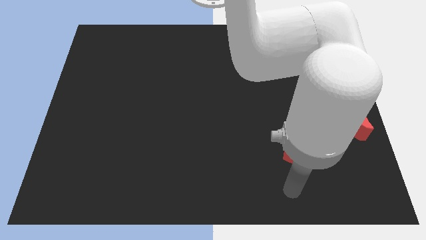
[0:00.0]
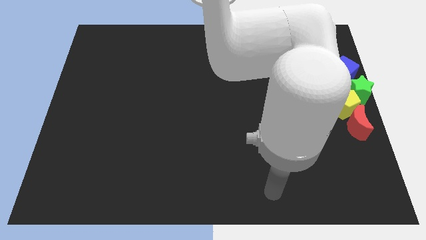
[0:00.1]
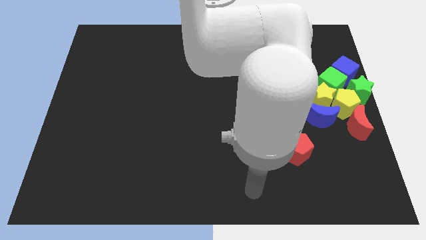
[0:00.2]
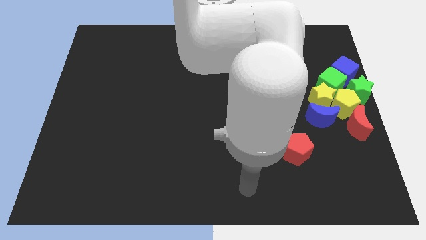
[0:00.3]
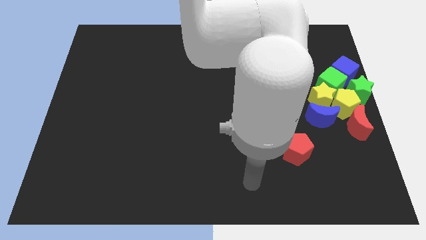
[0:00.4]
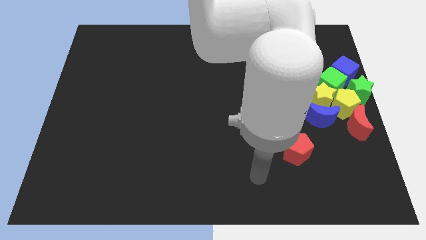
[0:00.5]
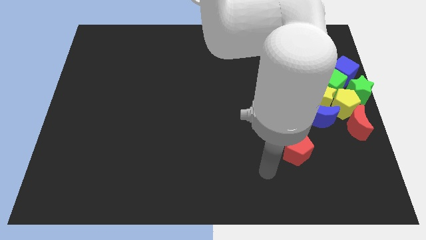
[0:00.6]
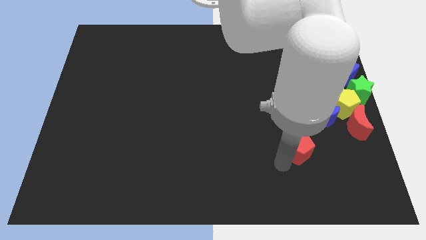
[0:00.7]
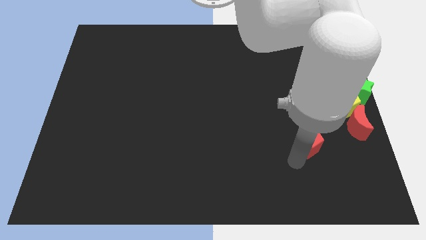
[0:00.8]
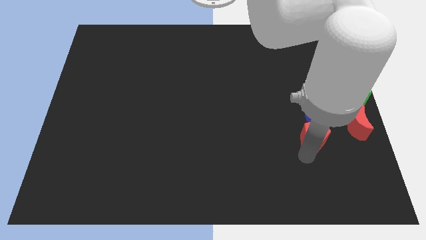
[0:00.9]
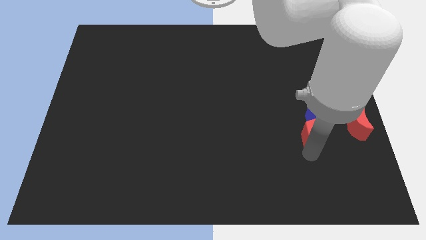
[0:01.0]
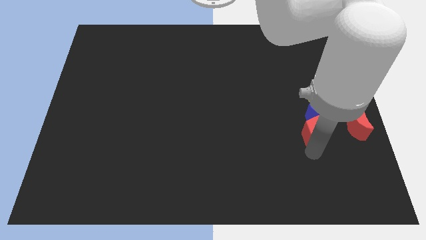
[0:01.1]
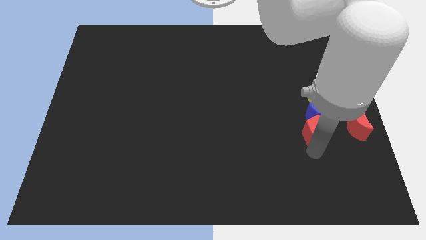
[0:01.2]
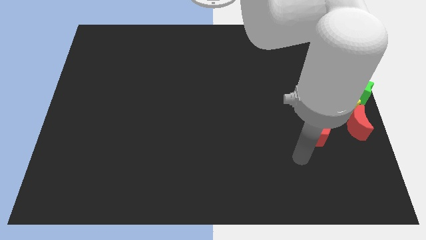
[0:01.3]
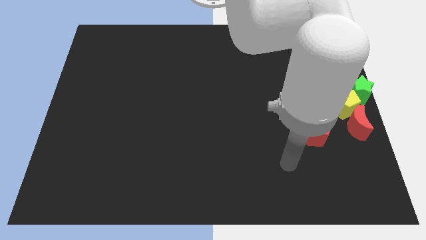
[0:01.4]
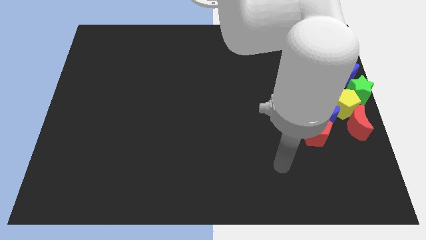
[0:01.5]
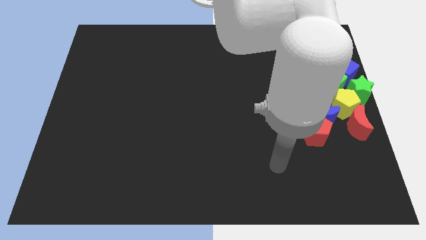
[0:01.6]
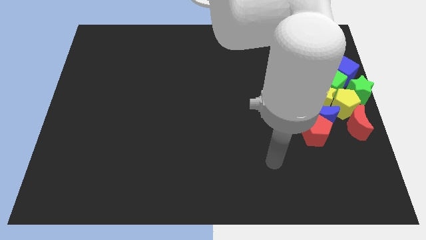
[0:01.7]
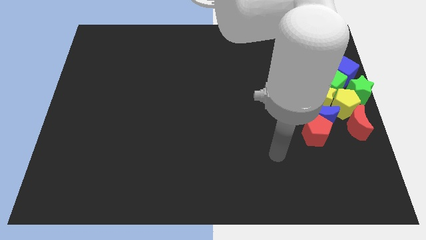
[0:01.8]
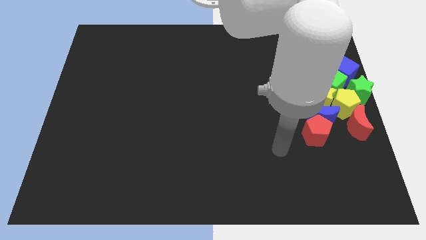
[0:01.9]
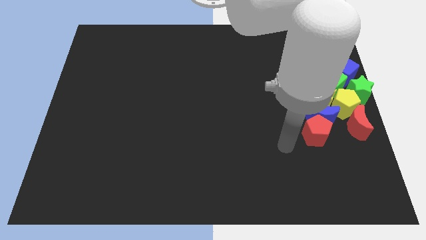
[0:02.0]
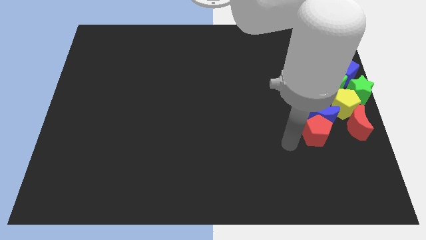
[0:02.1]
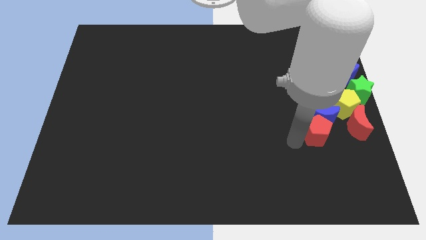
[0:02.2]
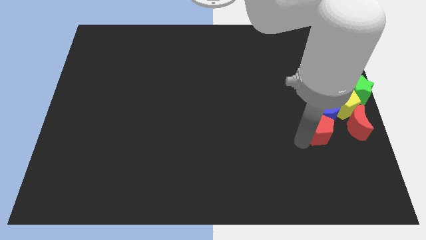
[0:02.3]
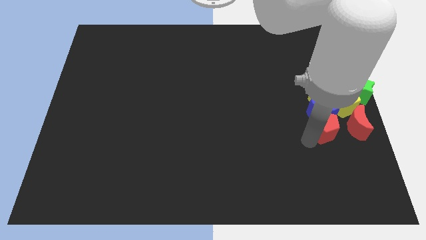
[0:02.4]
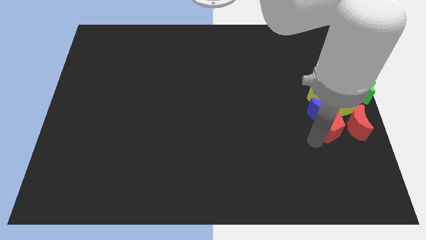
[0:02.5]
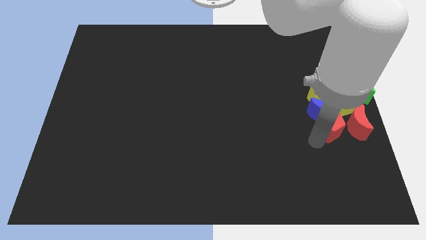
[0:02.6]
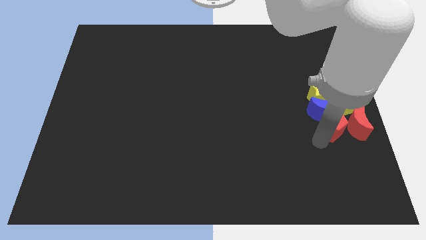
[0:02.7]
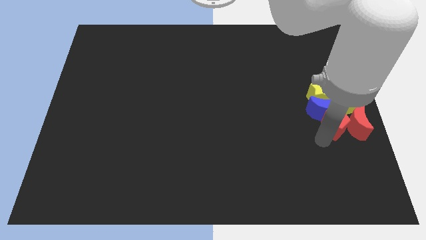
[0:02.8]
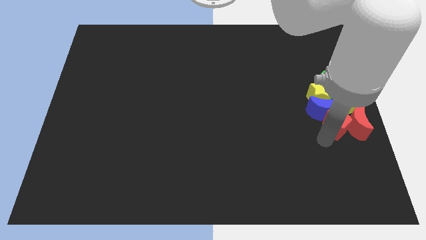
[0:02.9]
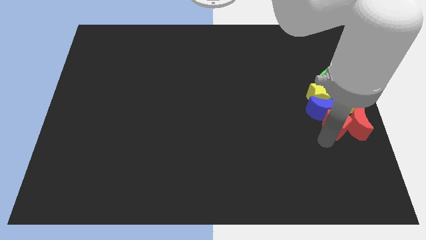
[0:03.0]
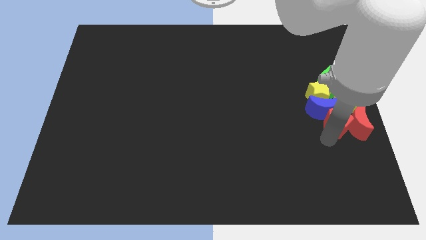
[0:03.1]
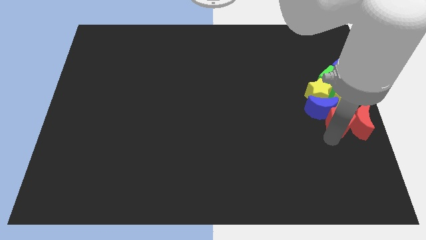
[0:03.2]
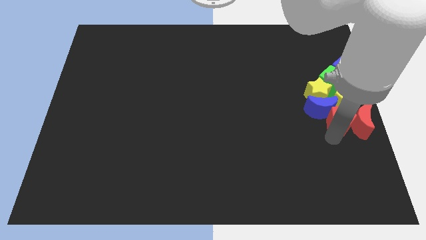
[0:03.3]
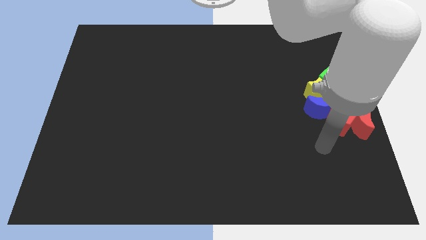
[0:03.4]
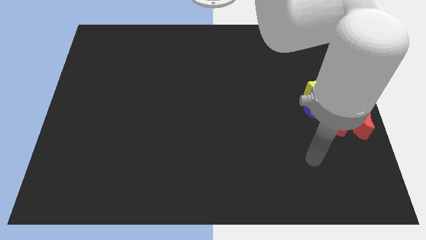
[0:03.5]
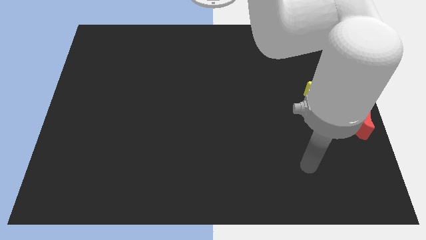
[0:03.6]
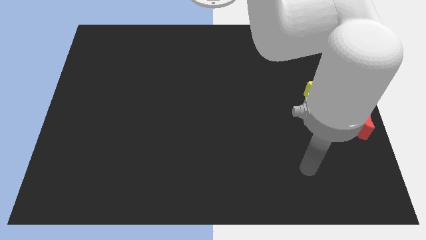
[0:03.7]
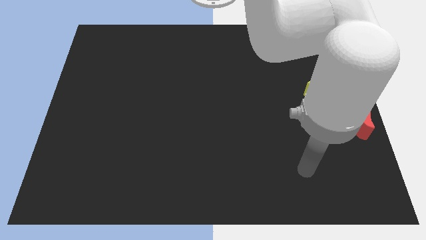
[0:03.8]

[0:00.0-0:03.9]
place the red pentagon beside the red crescent

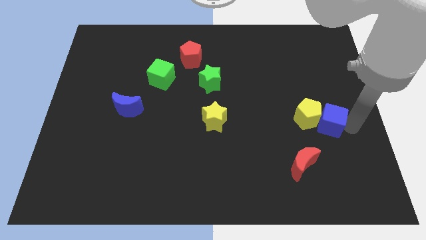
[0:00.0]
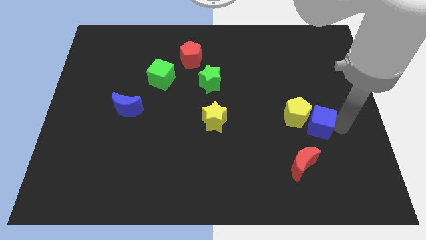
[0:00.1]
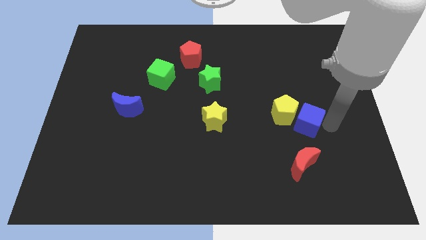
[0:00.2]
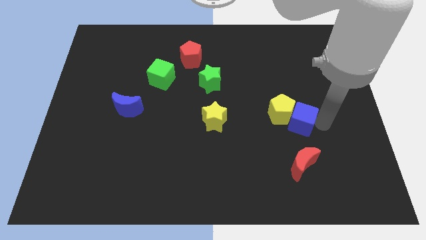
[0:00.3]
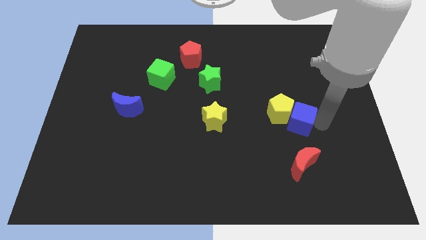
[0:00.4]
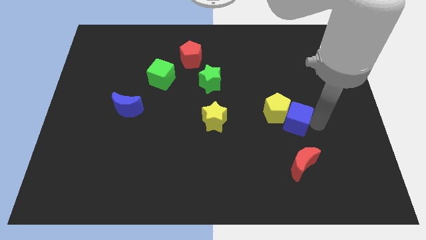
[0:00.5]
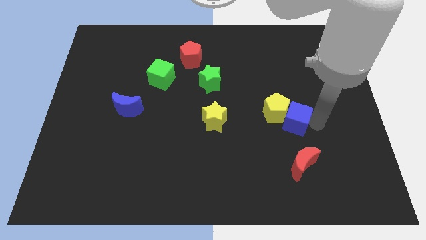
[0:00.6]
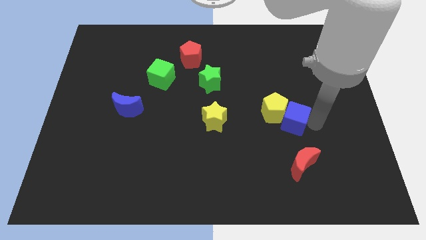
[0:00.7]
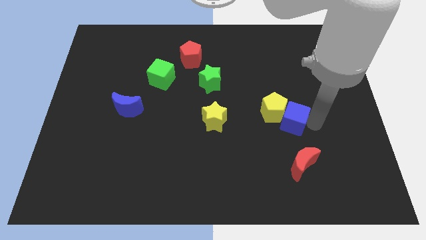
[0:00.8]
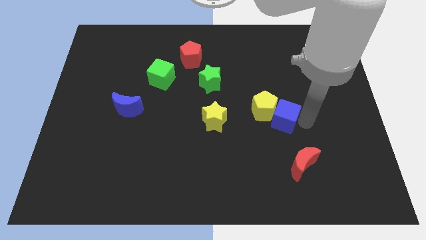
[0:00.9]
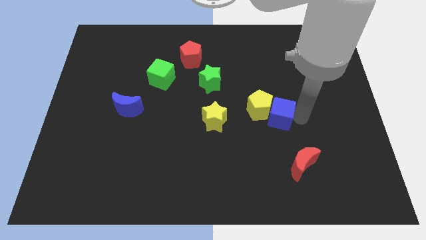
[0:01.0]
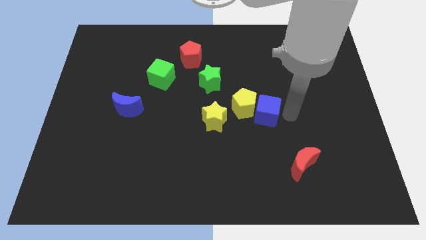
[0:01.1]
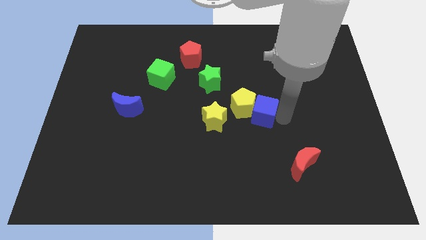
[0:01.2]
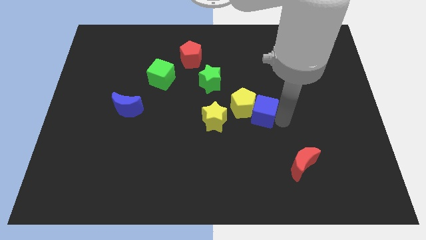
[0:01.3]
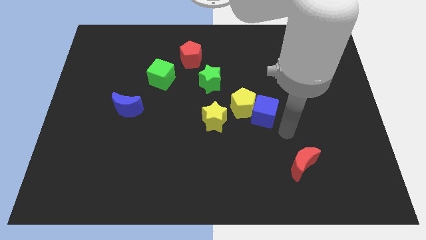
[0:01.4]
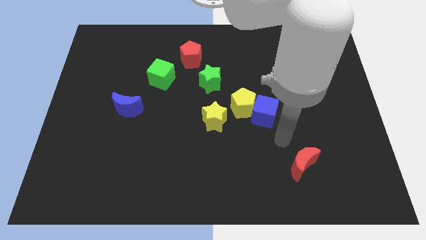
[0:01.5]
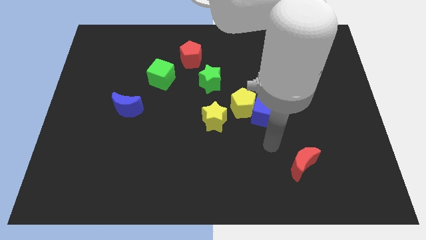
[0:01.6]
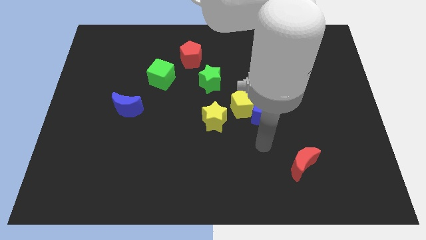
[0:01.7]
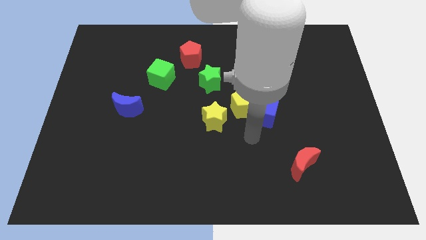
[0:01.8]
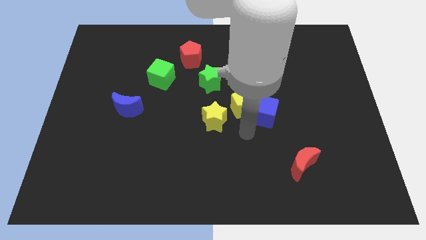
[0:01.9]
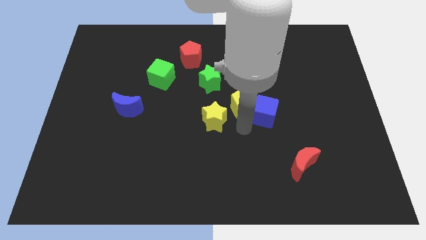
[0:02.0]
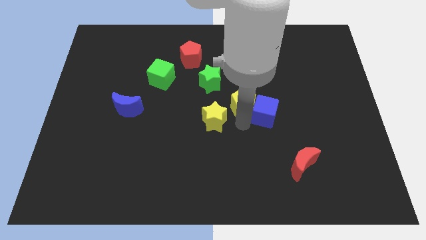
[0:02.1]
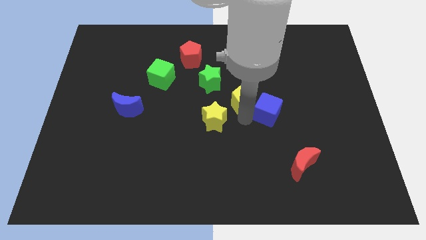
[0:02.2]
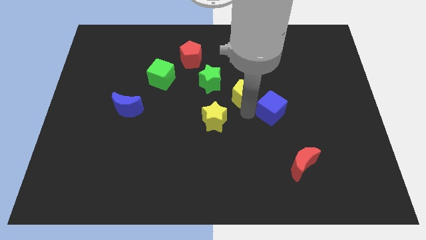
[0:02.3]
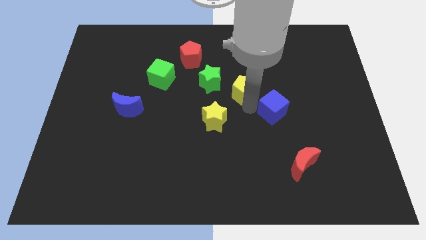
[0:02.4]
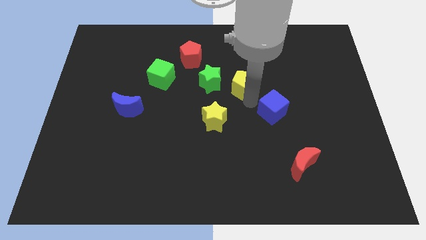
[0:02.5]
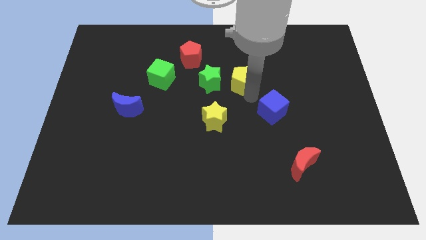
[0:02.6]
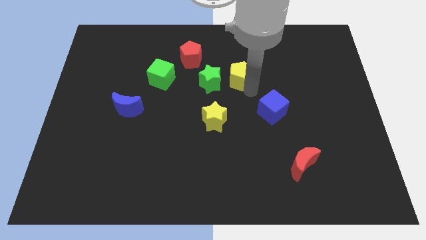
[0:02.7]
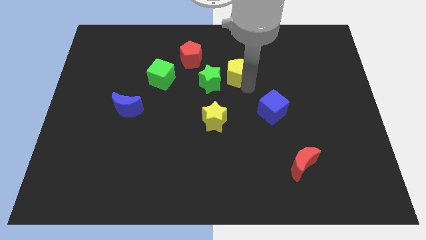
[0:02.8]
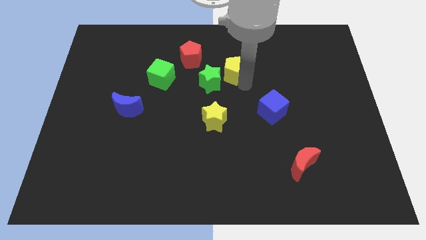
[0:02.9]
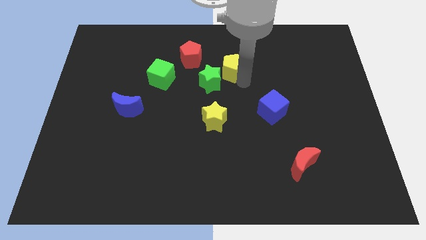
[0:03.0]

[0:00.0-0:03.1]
separate blue cube and the yellow pentagon

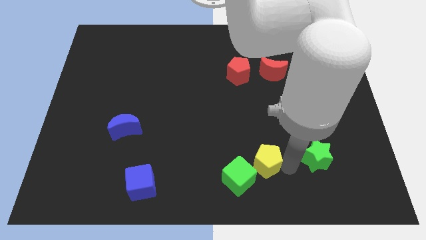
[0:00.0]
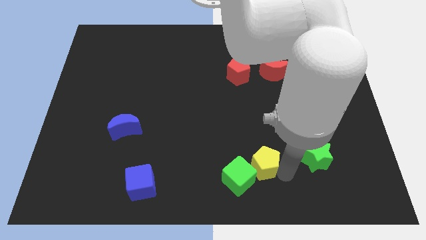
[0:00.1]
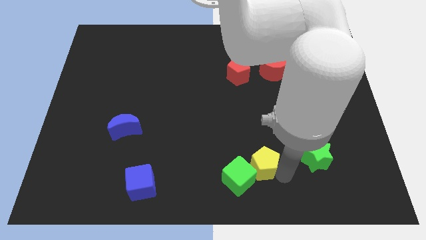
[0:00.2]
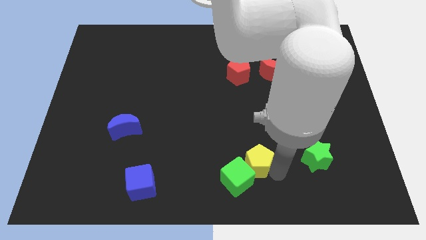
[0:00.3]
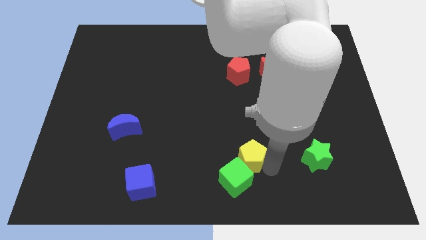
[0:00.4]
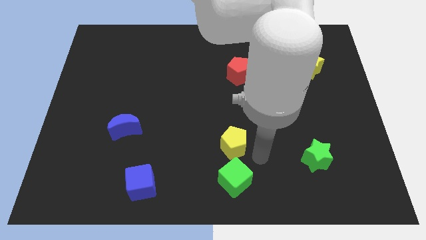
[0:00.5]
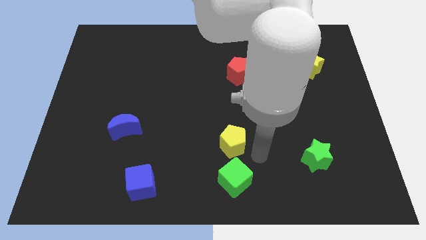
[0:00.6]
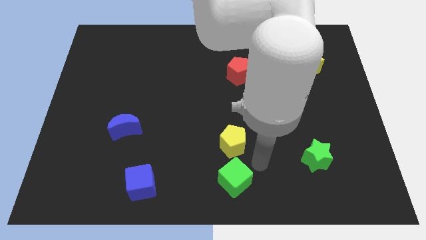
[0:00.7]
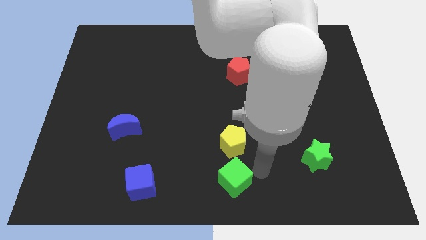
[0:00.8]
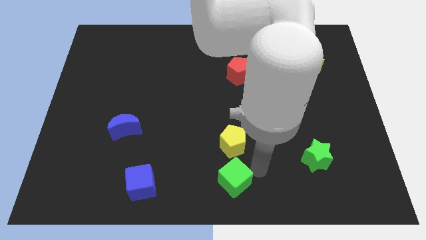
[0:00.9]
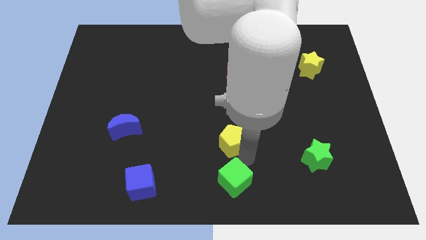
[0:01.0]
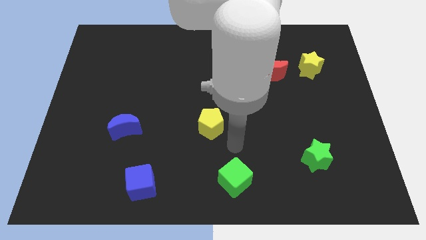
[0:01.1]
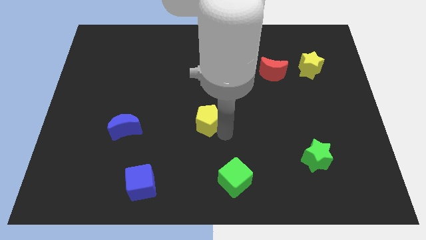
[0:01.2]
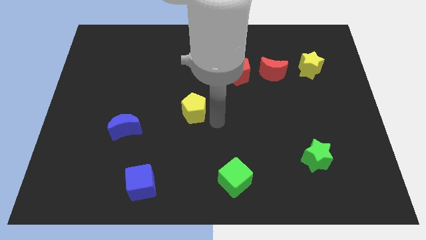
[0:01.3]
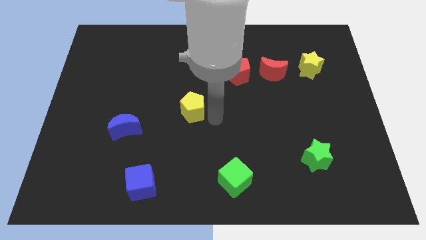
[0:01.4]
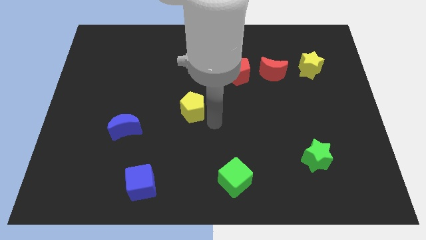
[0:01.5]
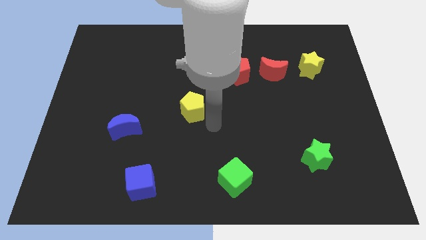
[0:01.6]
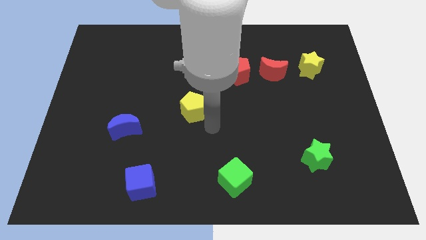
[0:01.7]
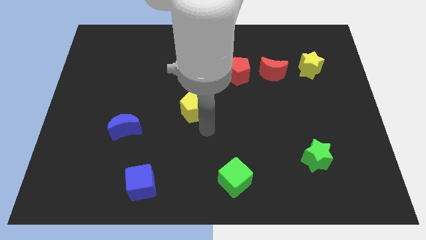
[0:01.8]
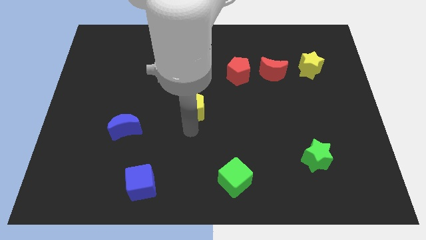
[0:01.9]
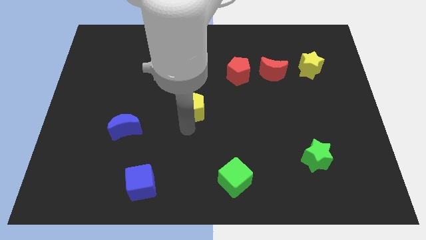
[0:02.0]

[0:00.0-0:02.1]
separate yellow pentagon from green cube
